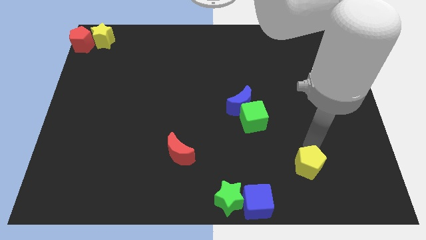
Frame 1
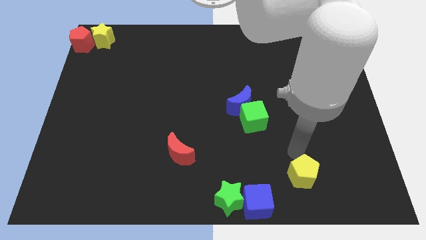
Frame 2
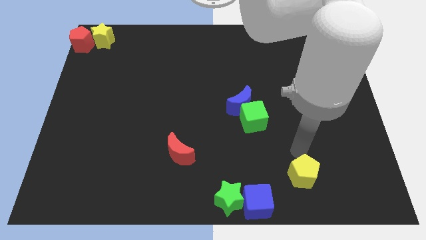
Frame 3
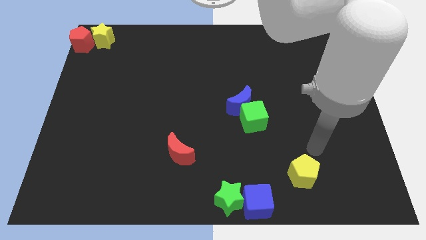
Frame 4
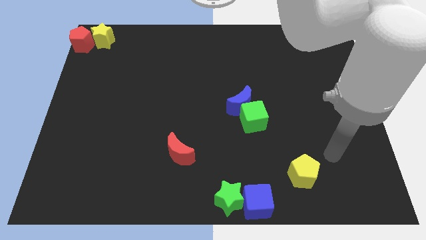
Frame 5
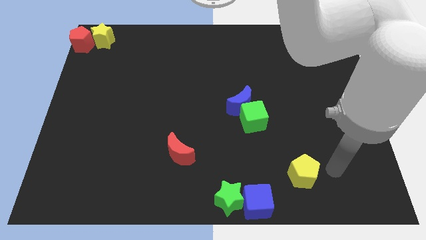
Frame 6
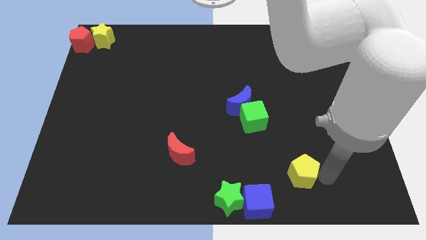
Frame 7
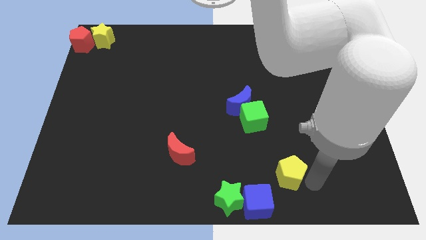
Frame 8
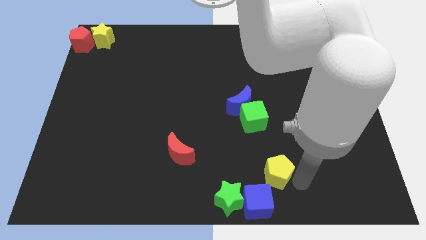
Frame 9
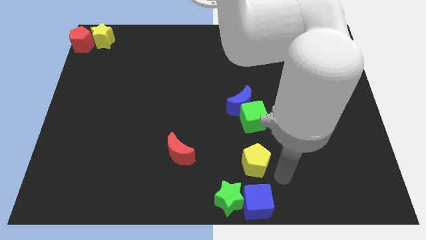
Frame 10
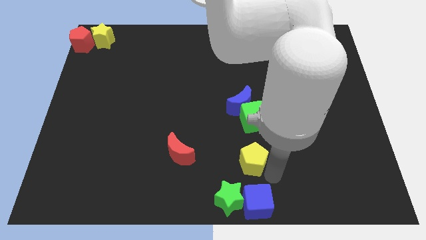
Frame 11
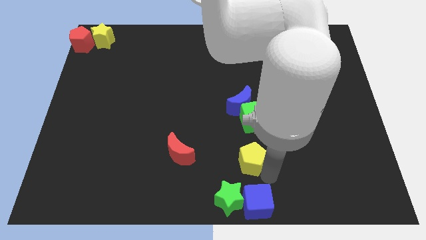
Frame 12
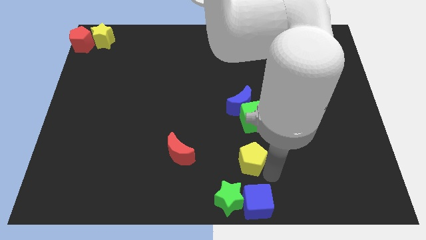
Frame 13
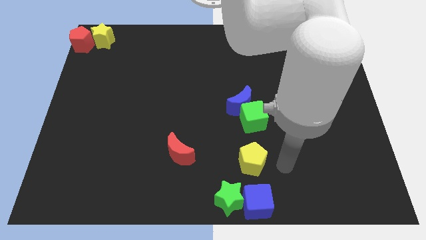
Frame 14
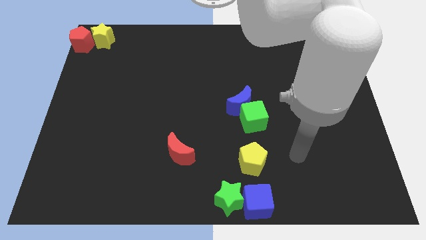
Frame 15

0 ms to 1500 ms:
place the yellow pentagon in between the green cube and the blue cube

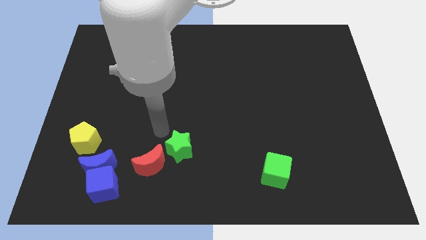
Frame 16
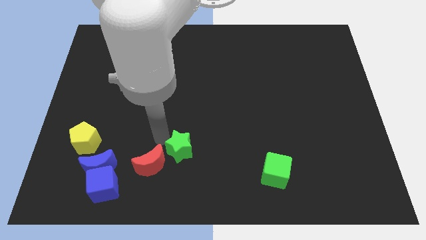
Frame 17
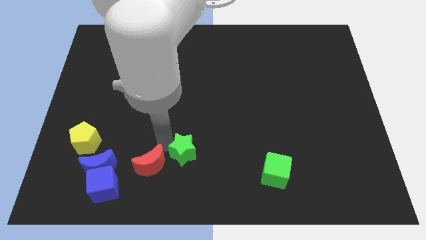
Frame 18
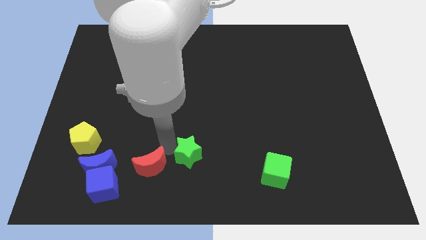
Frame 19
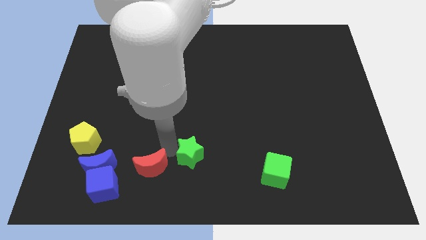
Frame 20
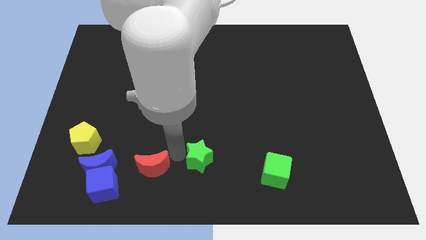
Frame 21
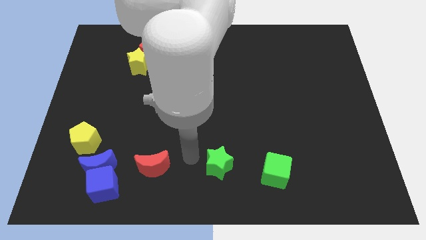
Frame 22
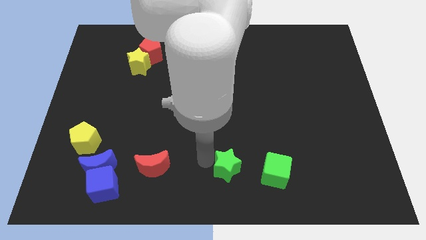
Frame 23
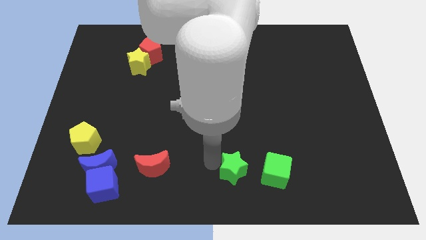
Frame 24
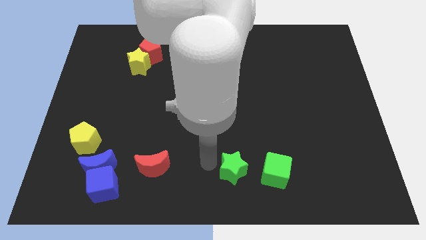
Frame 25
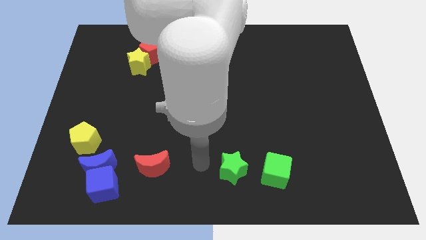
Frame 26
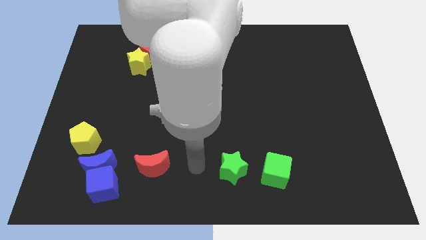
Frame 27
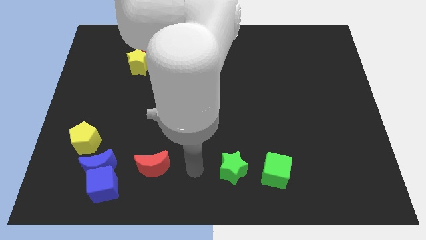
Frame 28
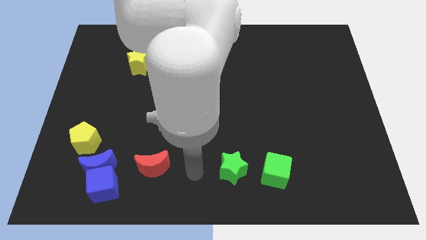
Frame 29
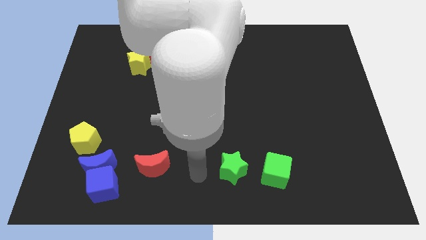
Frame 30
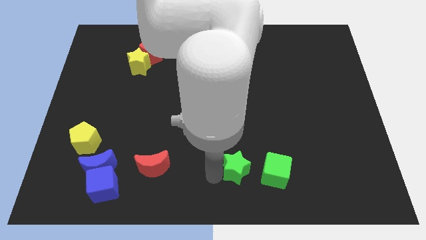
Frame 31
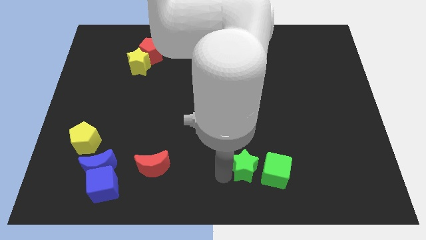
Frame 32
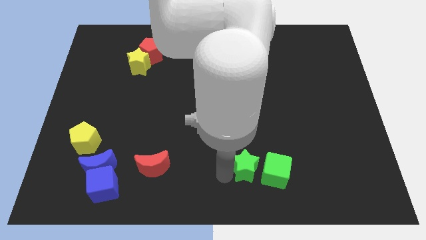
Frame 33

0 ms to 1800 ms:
push the green star to the left of the green cube

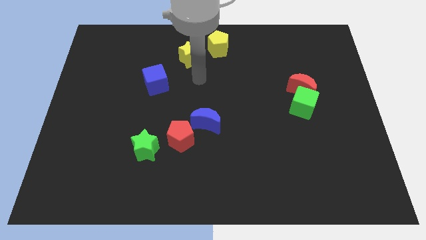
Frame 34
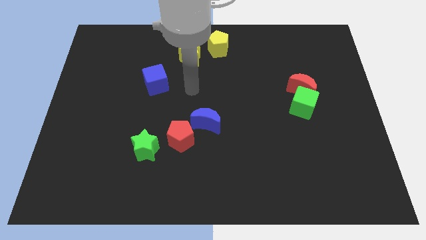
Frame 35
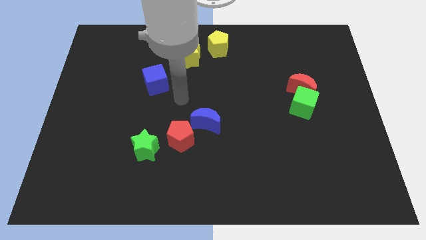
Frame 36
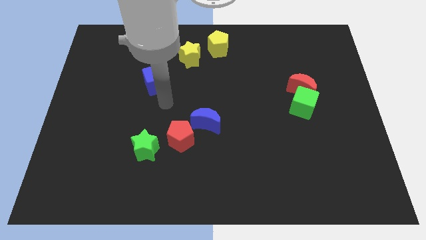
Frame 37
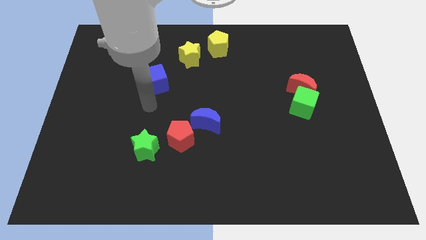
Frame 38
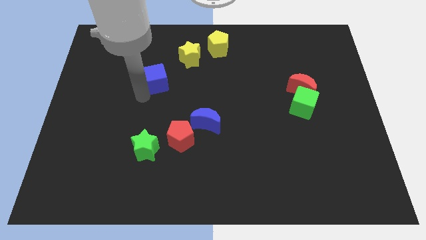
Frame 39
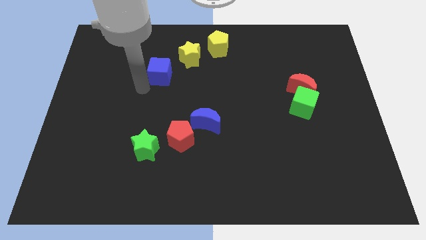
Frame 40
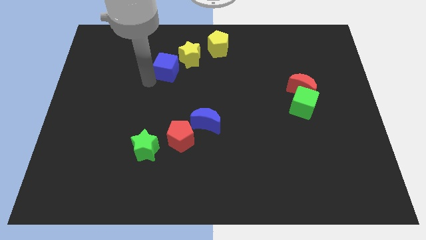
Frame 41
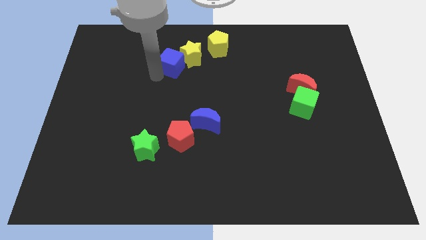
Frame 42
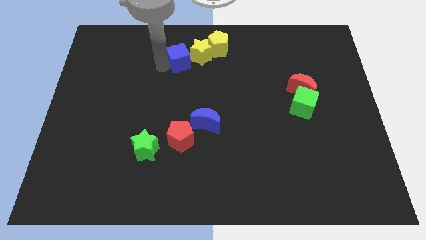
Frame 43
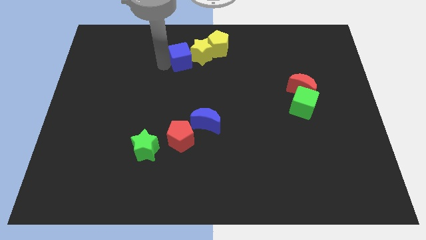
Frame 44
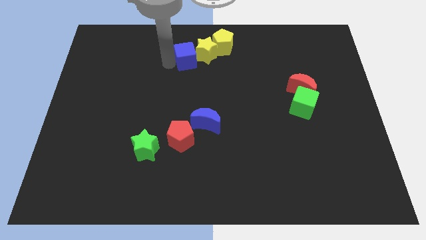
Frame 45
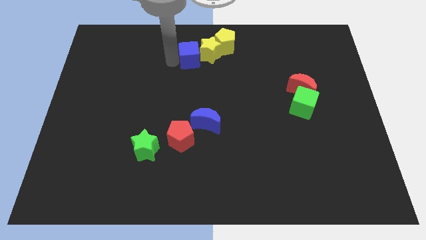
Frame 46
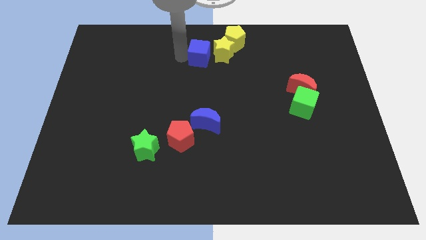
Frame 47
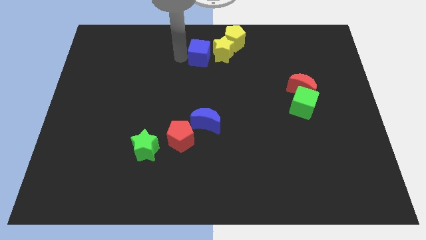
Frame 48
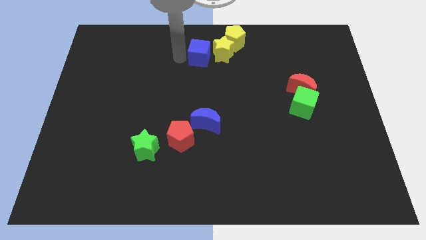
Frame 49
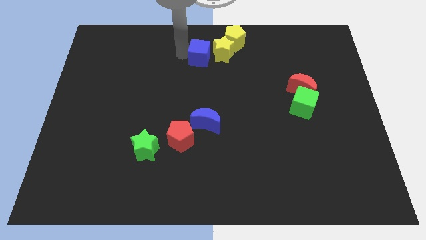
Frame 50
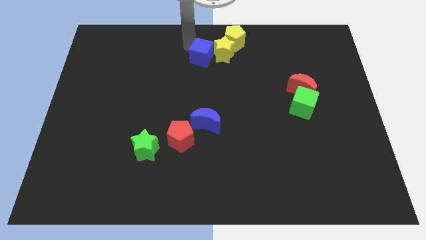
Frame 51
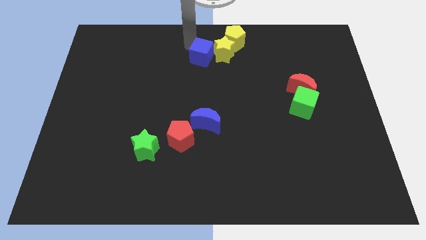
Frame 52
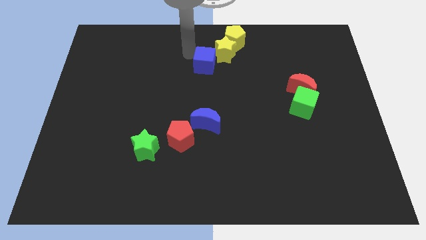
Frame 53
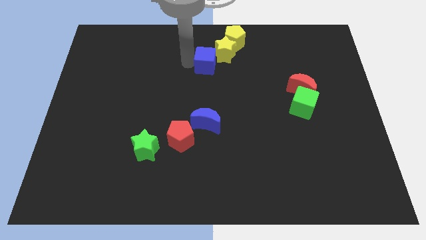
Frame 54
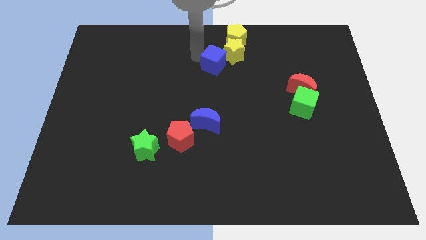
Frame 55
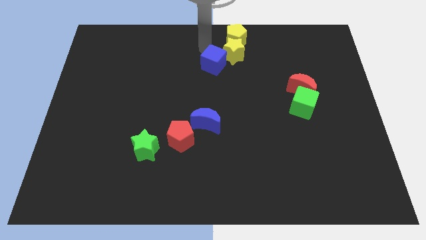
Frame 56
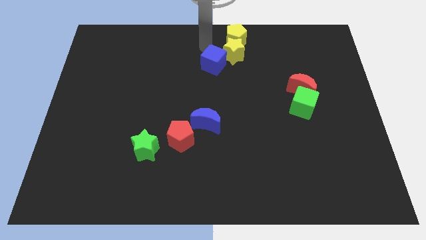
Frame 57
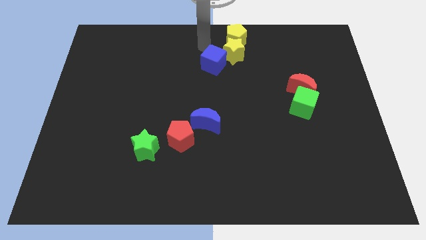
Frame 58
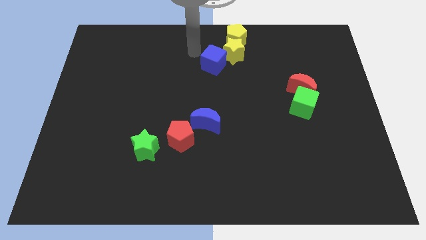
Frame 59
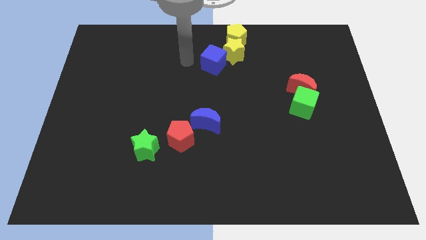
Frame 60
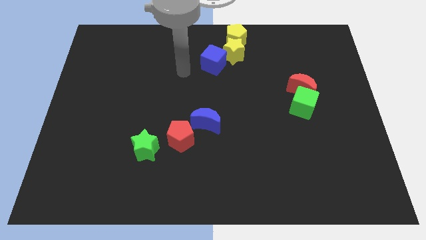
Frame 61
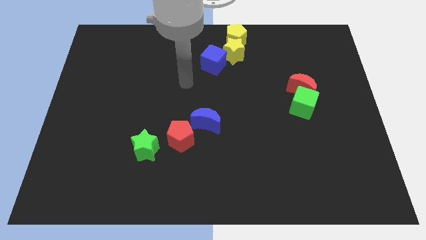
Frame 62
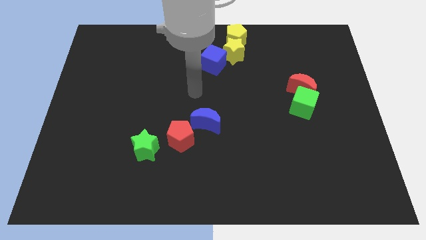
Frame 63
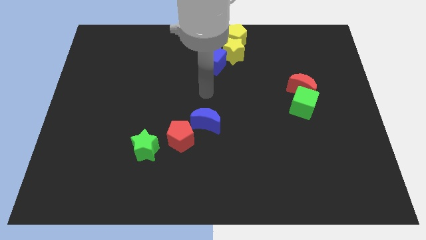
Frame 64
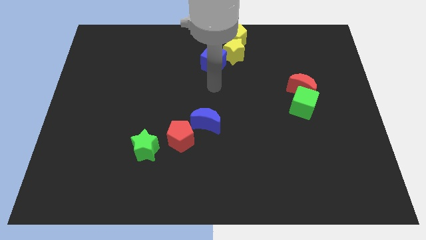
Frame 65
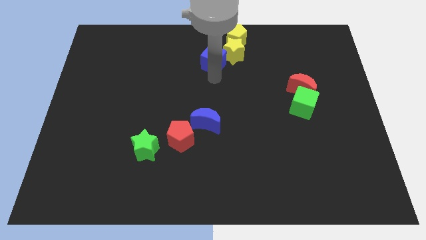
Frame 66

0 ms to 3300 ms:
push the group of blocks at the top center of the table

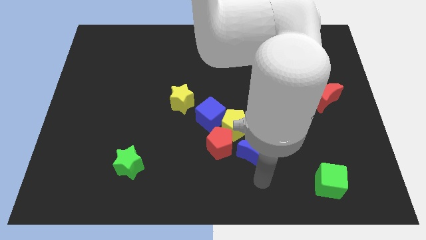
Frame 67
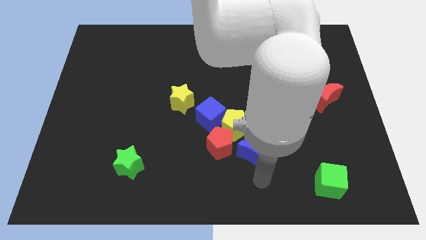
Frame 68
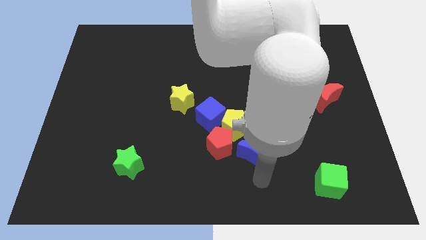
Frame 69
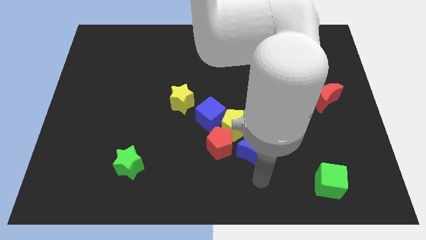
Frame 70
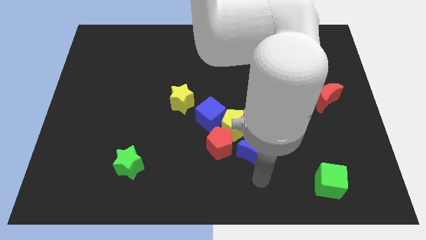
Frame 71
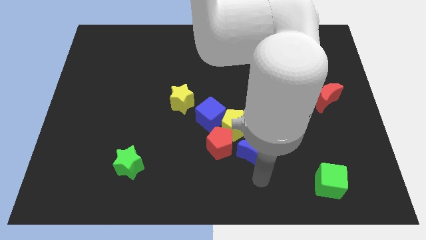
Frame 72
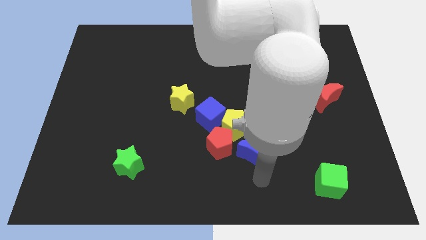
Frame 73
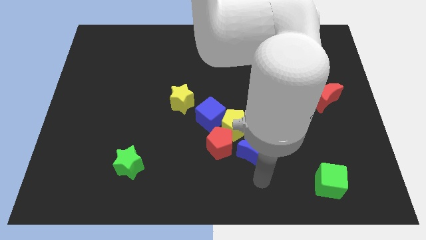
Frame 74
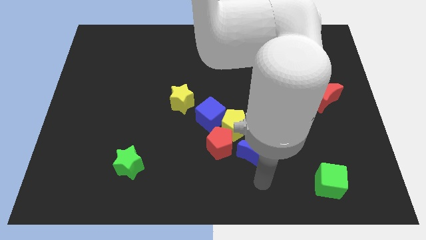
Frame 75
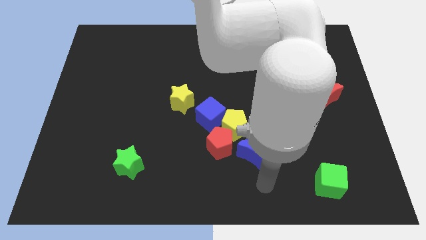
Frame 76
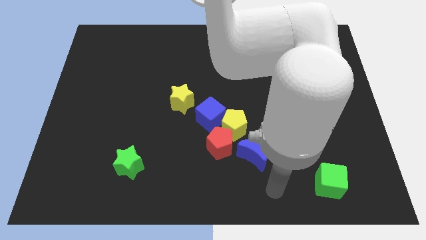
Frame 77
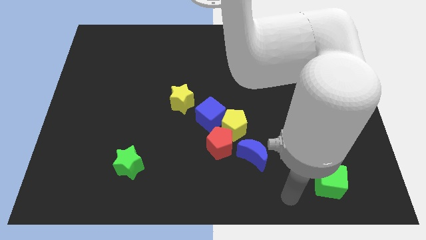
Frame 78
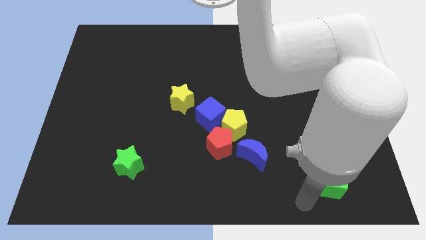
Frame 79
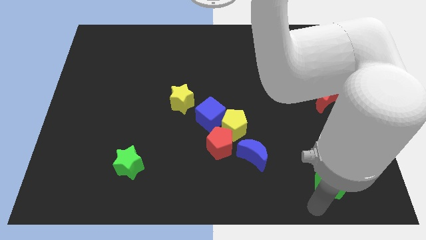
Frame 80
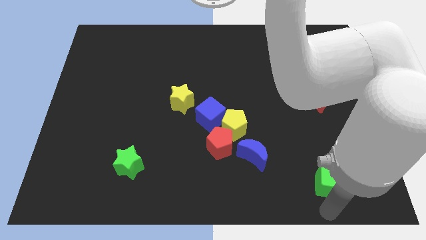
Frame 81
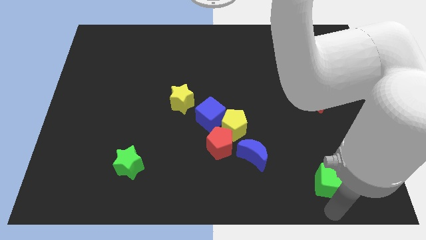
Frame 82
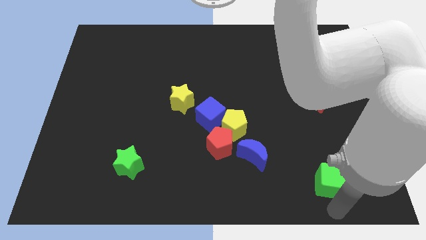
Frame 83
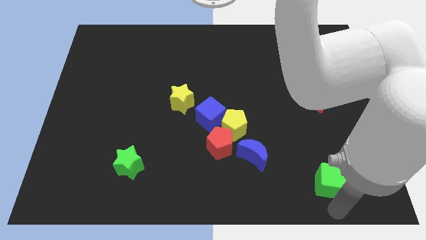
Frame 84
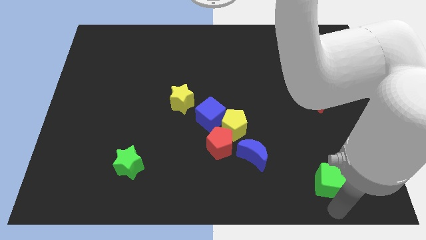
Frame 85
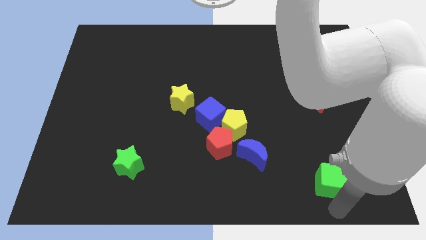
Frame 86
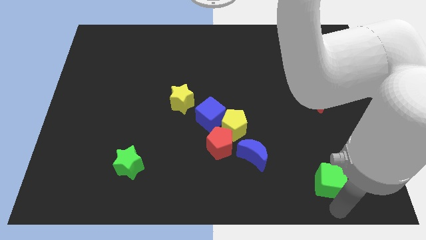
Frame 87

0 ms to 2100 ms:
move your arm to the bottom of the green cube

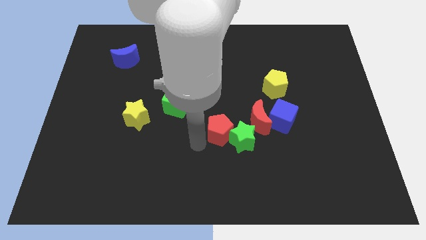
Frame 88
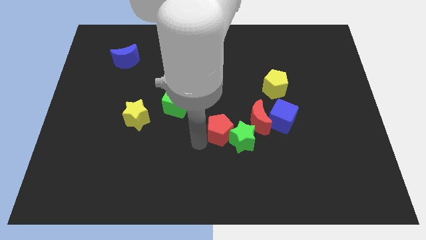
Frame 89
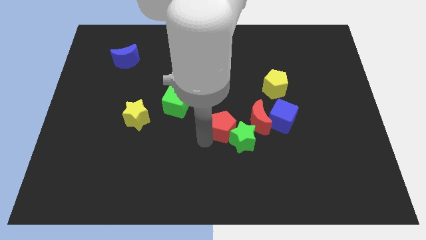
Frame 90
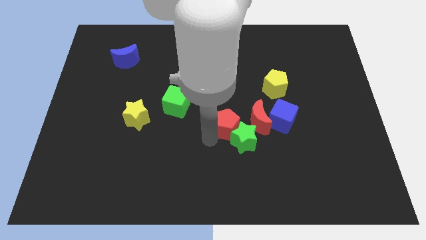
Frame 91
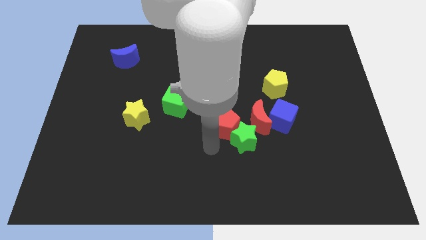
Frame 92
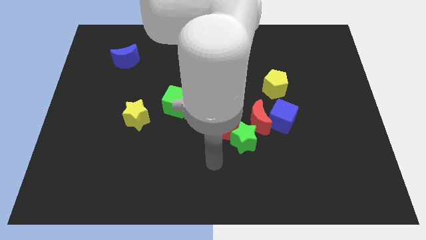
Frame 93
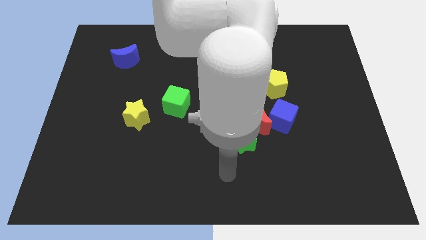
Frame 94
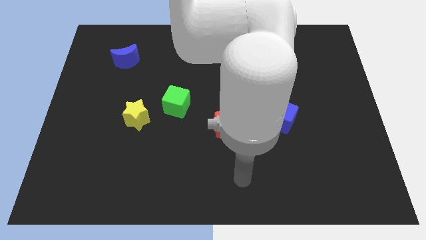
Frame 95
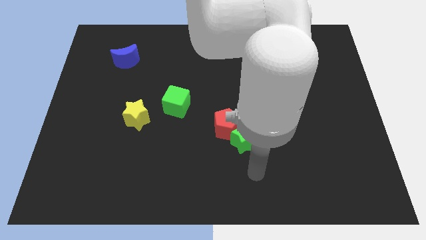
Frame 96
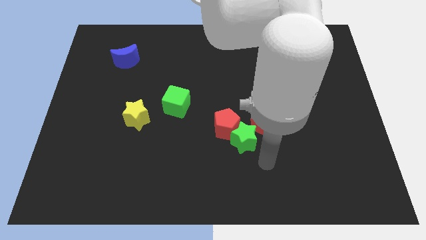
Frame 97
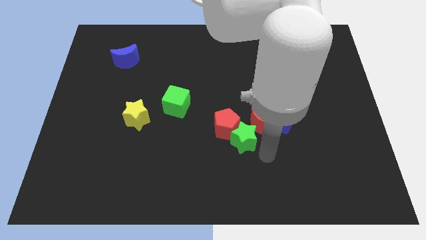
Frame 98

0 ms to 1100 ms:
push red pentagon slightly up
